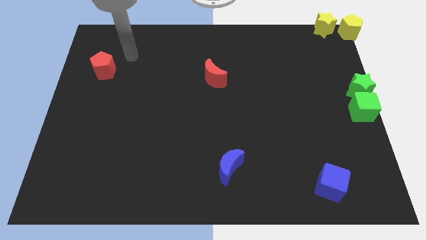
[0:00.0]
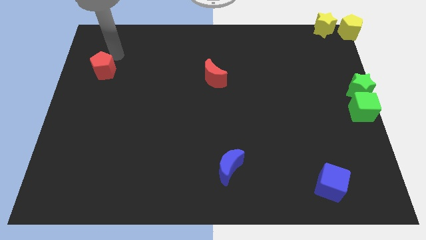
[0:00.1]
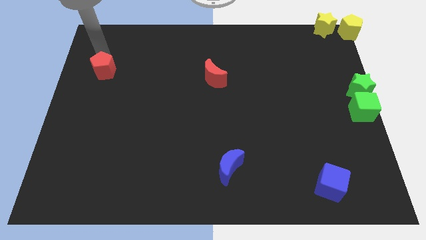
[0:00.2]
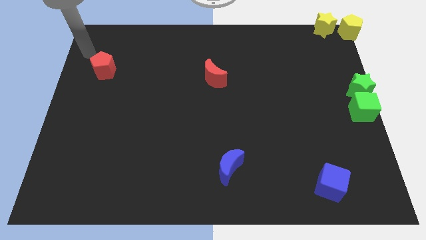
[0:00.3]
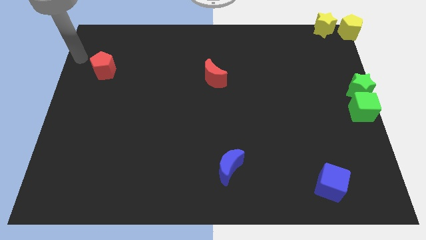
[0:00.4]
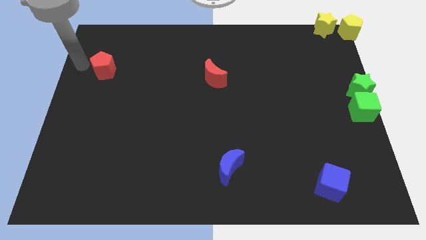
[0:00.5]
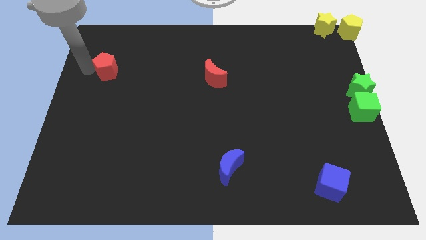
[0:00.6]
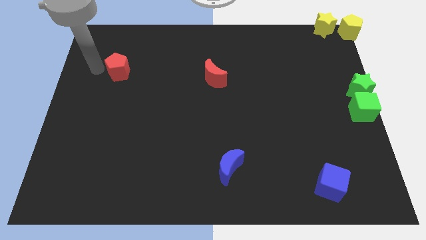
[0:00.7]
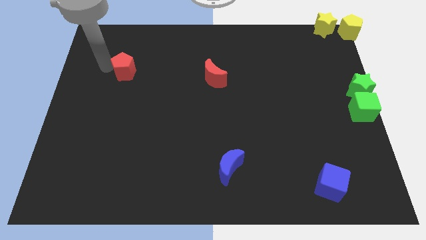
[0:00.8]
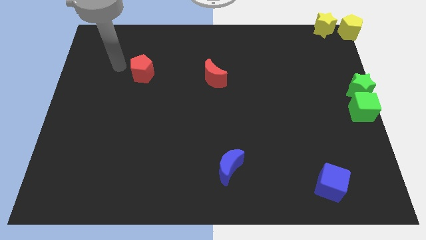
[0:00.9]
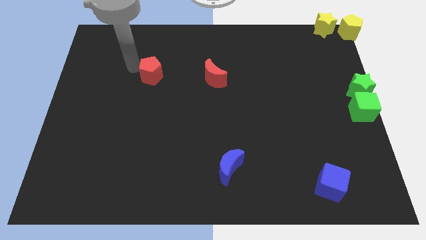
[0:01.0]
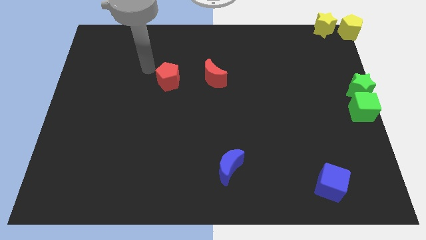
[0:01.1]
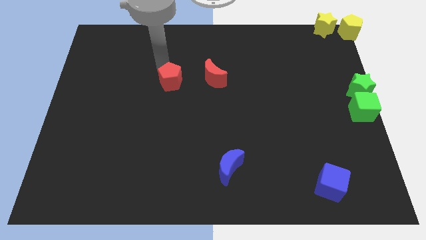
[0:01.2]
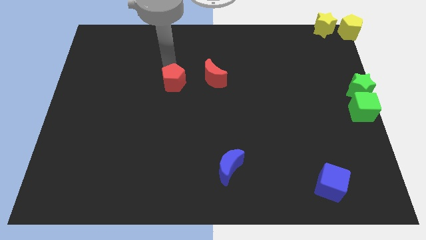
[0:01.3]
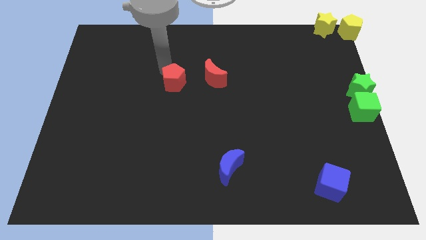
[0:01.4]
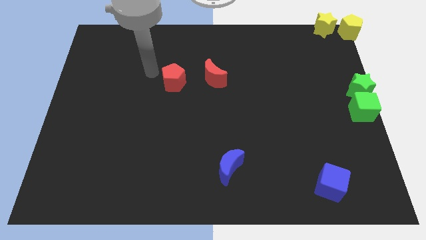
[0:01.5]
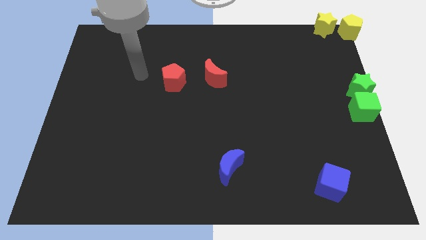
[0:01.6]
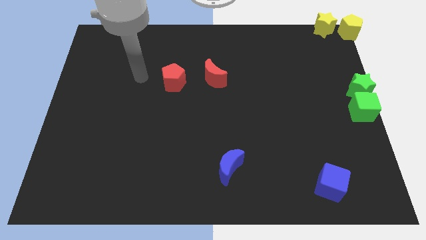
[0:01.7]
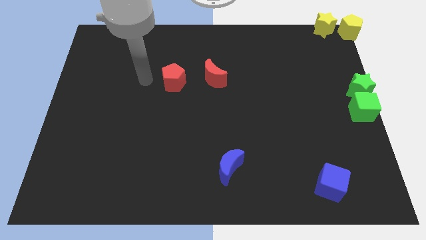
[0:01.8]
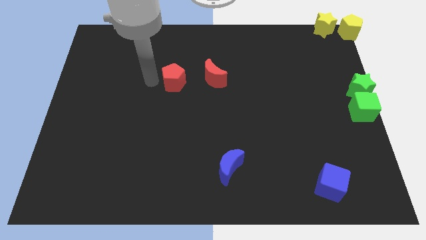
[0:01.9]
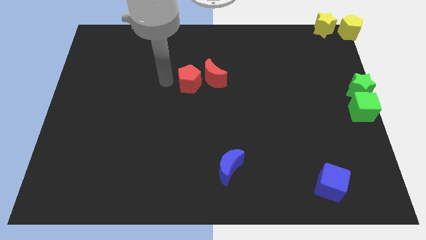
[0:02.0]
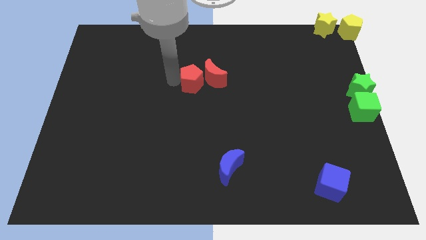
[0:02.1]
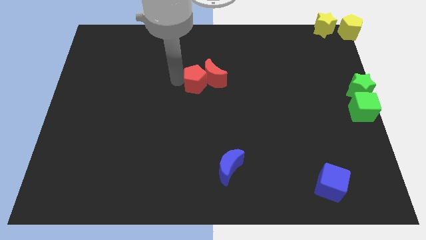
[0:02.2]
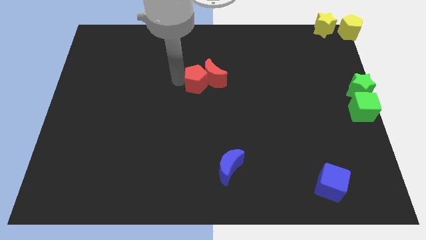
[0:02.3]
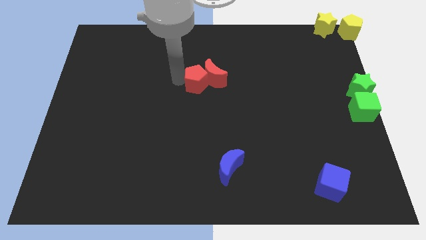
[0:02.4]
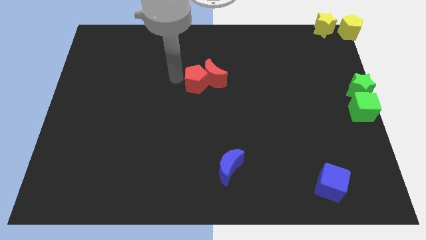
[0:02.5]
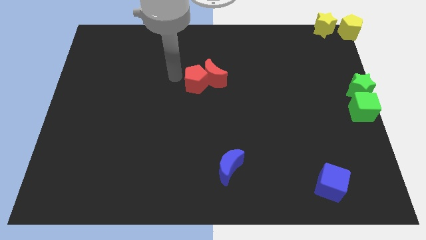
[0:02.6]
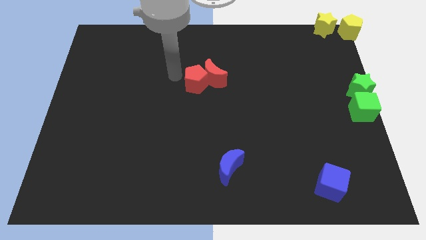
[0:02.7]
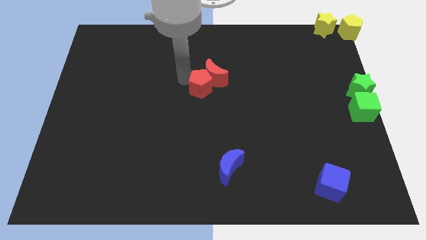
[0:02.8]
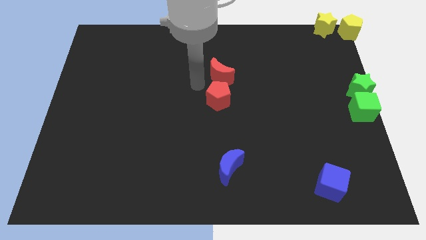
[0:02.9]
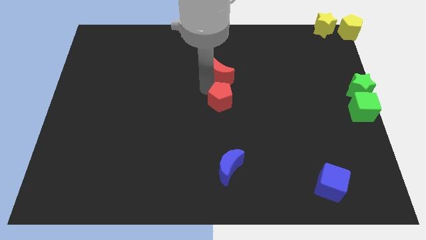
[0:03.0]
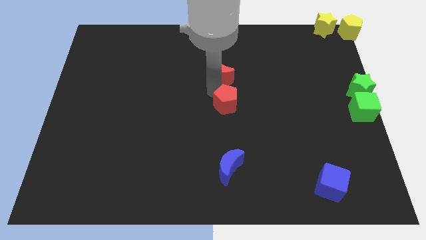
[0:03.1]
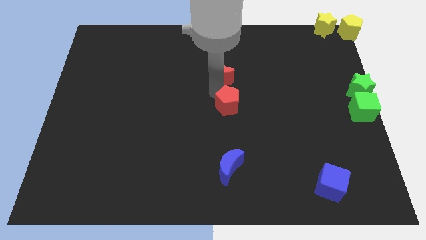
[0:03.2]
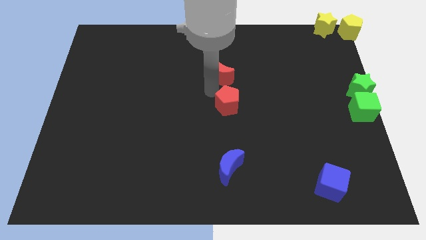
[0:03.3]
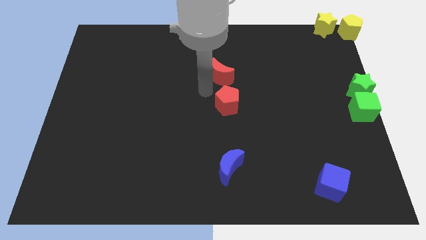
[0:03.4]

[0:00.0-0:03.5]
push the red pentagon into the red crescent

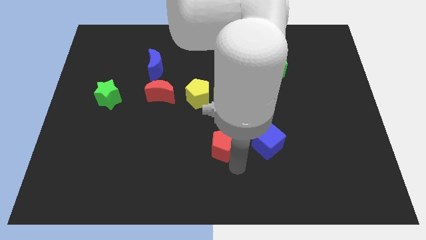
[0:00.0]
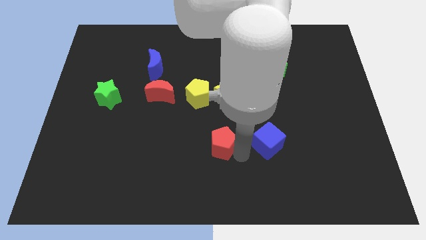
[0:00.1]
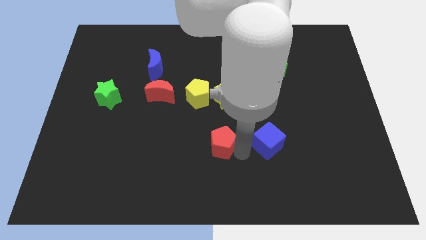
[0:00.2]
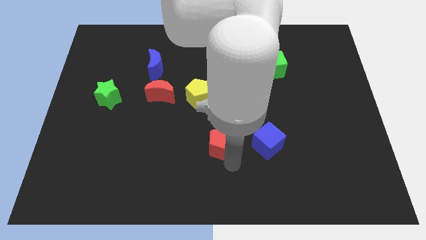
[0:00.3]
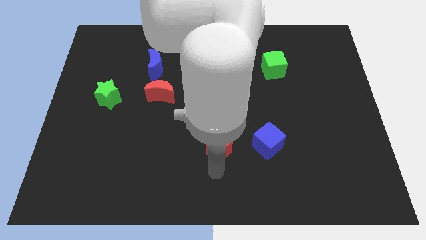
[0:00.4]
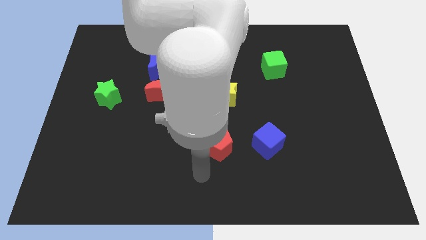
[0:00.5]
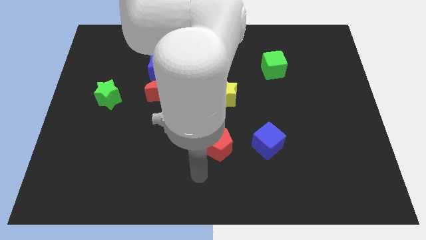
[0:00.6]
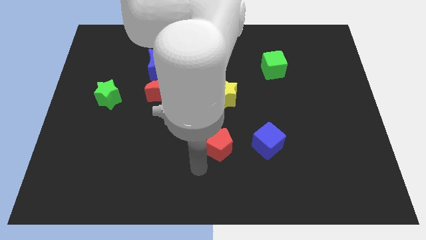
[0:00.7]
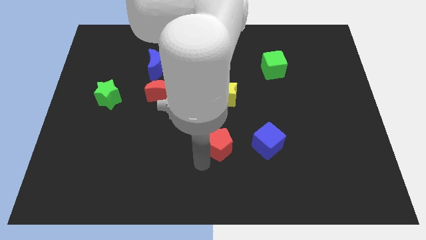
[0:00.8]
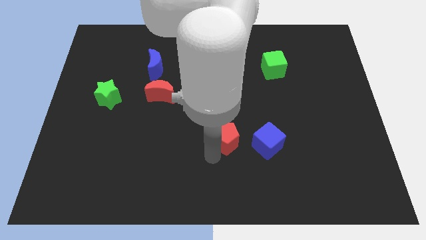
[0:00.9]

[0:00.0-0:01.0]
push red pentagon upwards

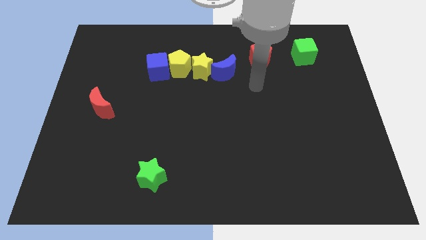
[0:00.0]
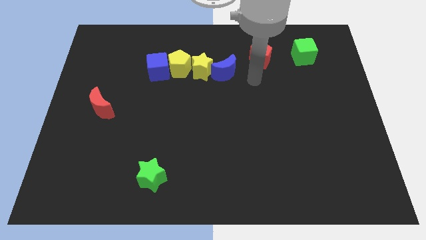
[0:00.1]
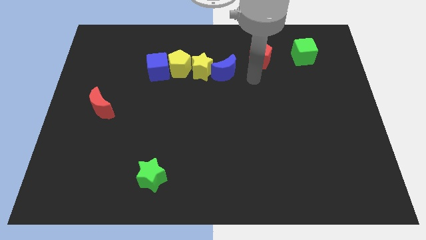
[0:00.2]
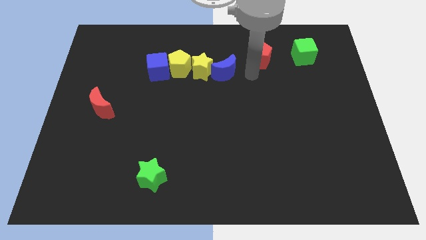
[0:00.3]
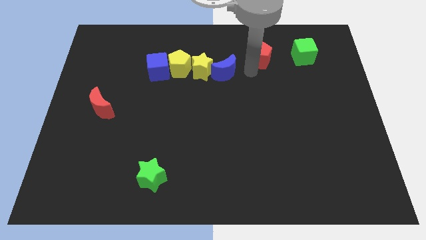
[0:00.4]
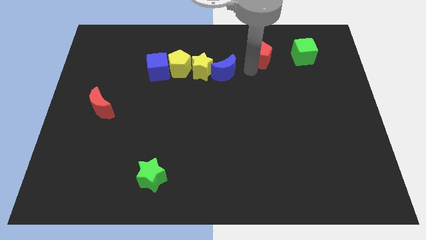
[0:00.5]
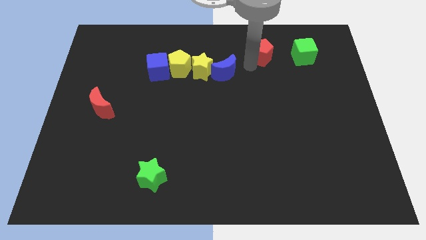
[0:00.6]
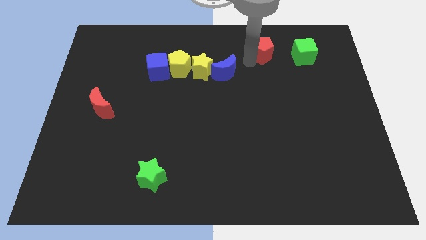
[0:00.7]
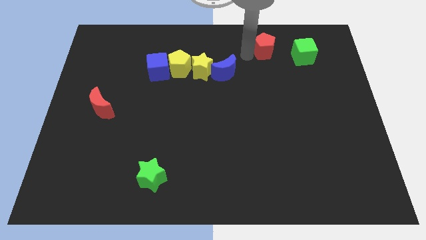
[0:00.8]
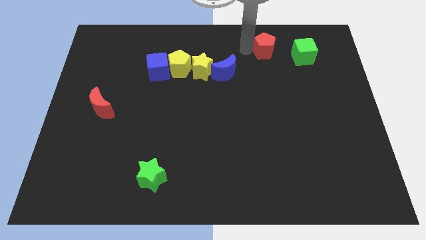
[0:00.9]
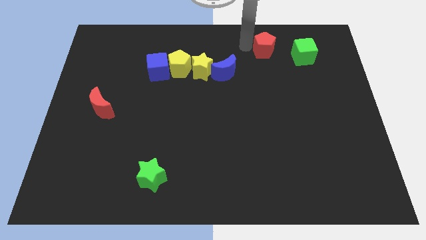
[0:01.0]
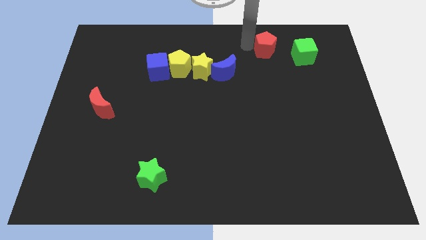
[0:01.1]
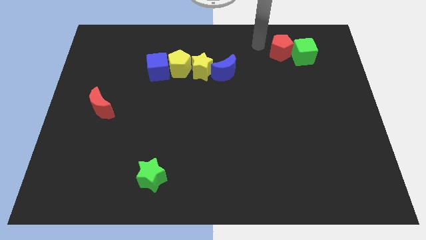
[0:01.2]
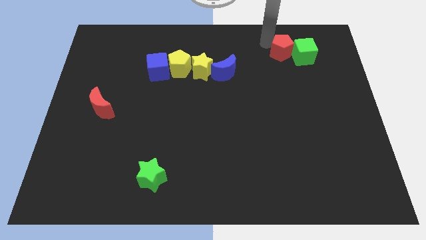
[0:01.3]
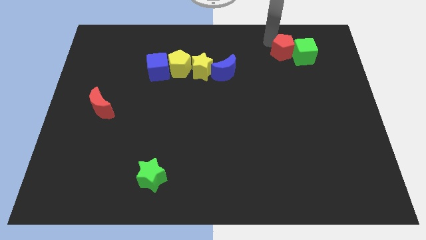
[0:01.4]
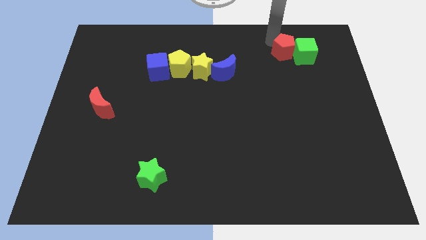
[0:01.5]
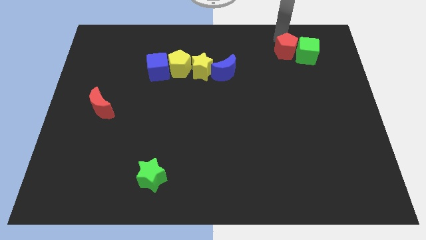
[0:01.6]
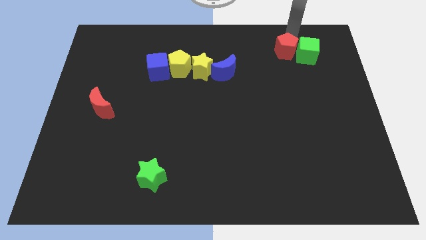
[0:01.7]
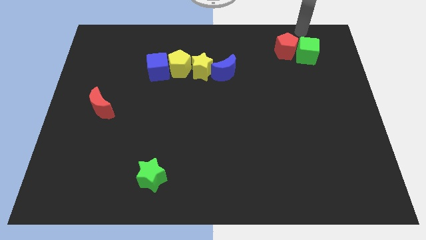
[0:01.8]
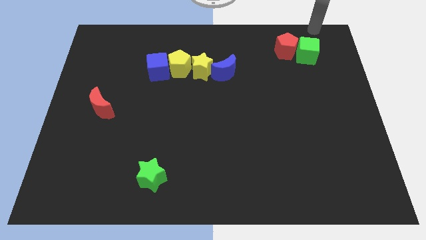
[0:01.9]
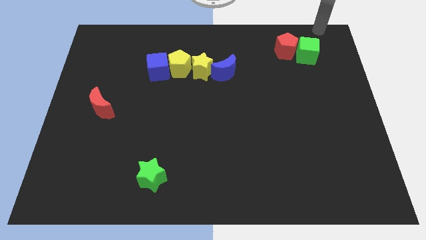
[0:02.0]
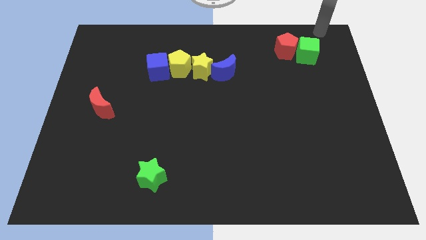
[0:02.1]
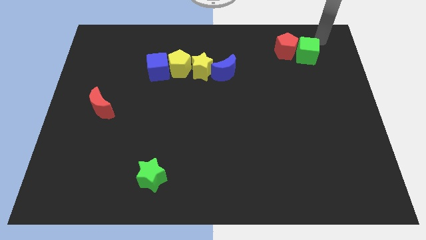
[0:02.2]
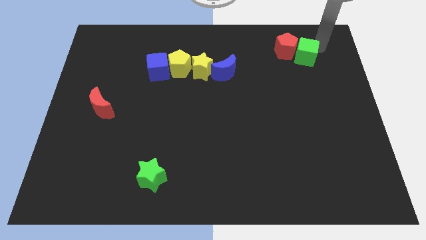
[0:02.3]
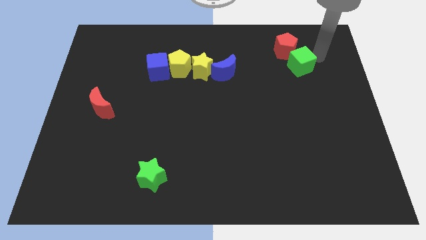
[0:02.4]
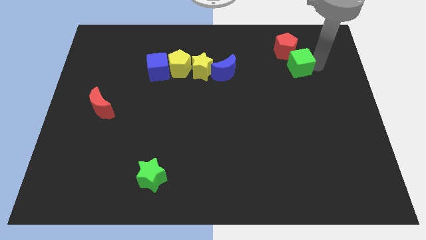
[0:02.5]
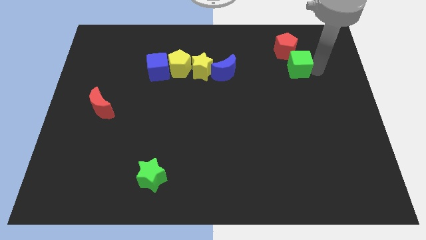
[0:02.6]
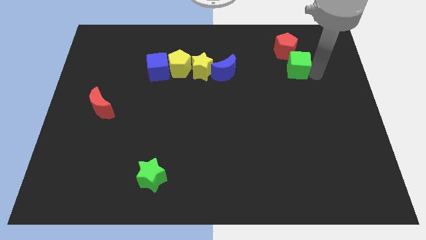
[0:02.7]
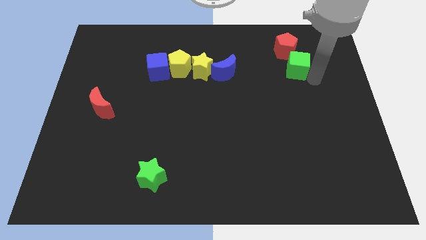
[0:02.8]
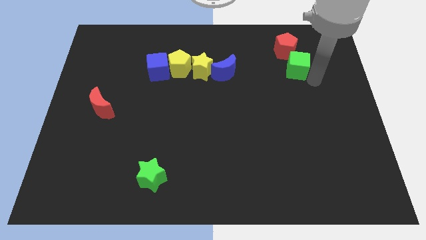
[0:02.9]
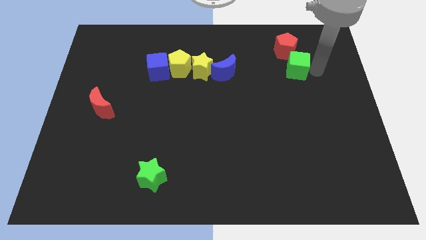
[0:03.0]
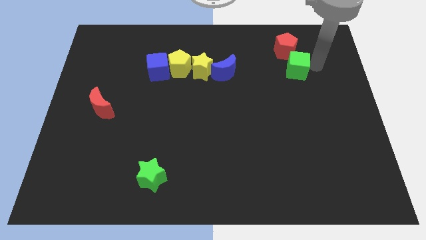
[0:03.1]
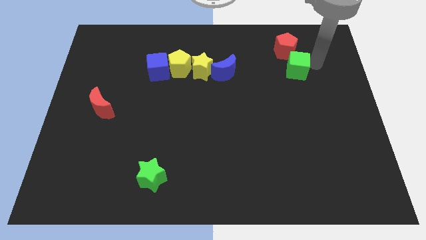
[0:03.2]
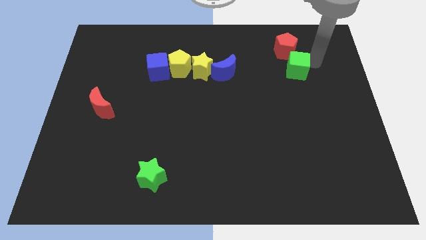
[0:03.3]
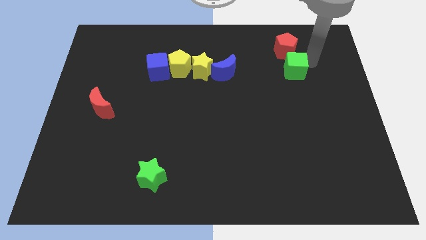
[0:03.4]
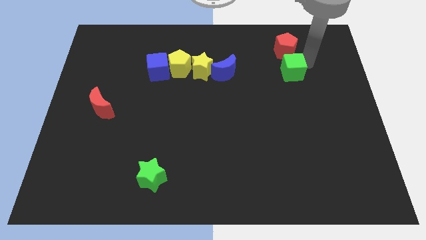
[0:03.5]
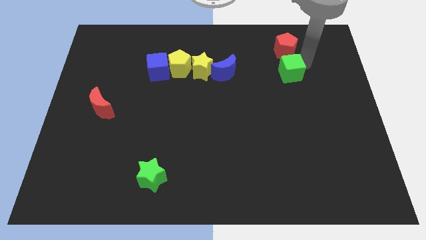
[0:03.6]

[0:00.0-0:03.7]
push the red pentagon into the green cube

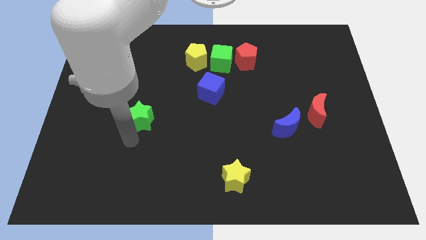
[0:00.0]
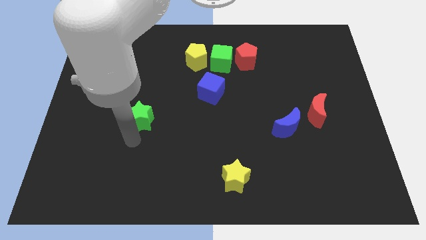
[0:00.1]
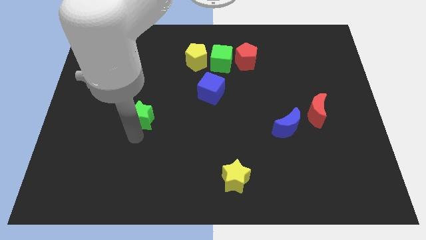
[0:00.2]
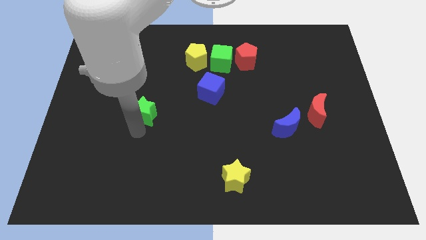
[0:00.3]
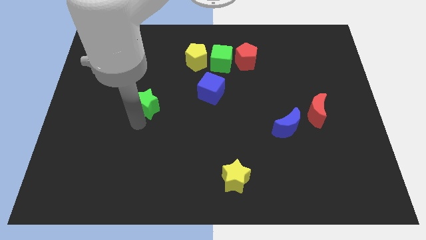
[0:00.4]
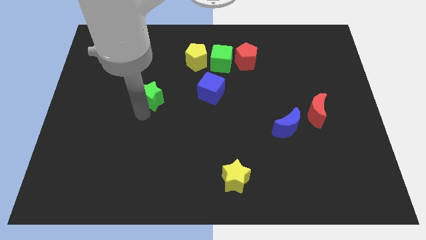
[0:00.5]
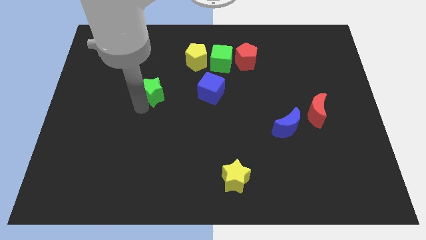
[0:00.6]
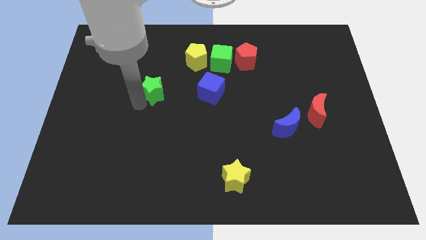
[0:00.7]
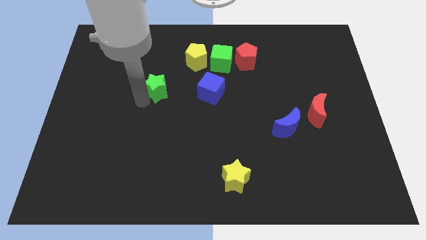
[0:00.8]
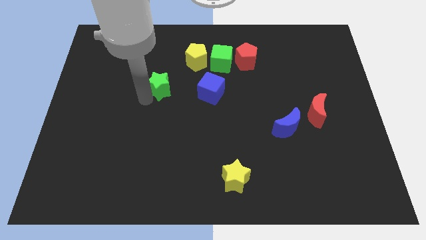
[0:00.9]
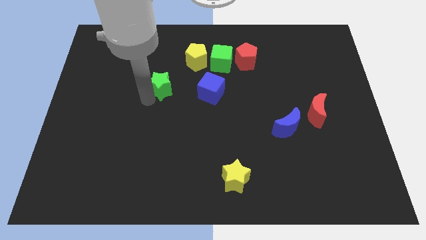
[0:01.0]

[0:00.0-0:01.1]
place green star to the left of blue cube
